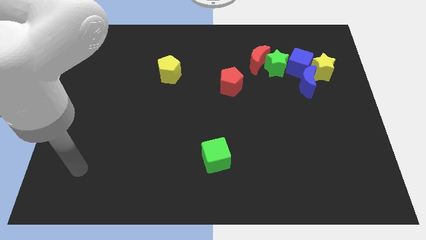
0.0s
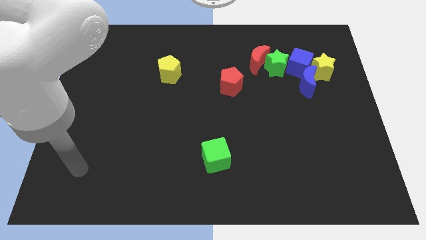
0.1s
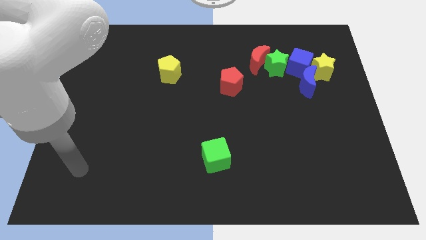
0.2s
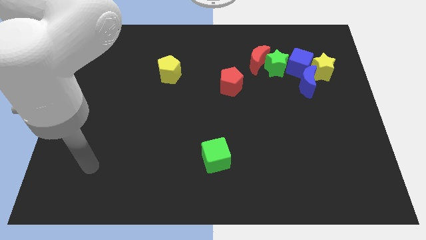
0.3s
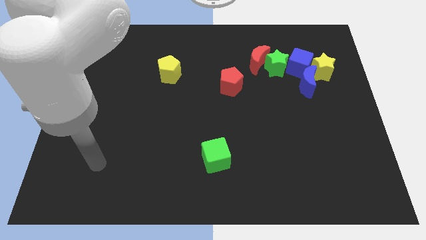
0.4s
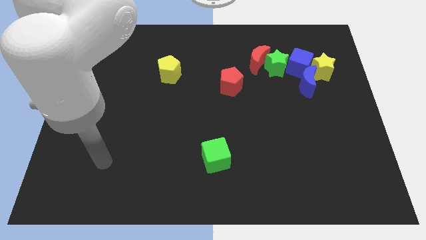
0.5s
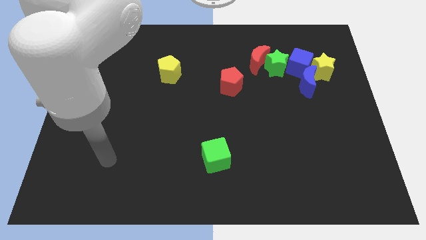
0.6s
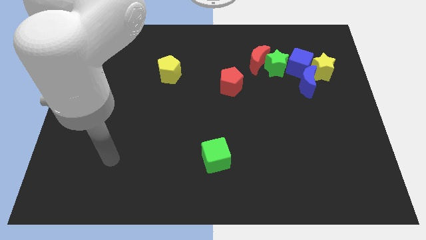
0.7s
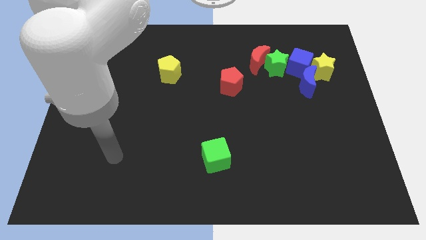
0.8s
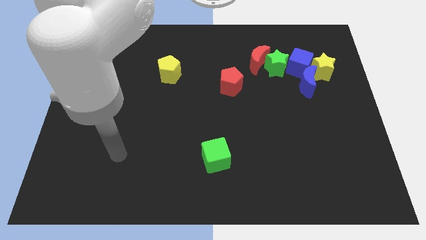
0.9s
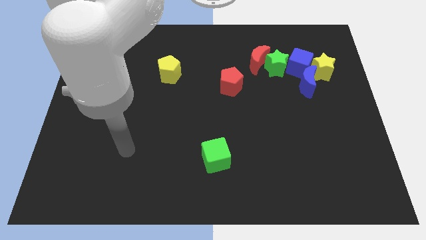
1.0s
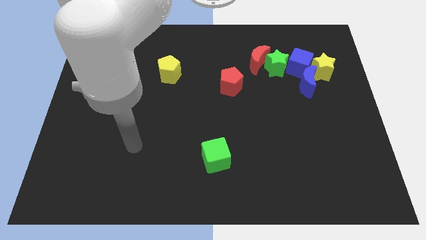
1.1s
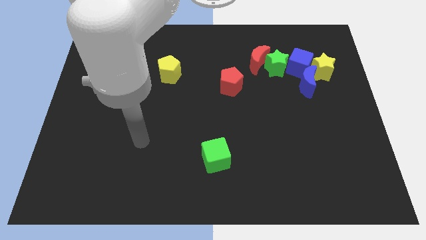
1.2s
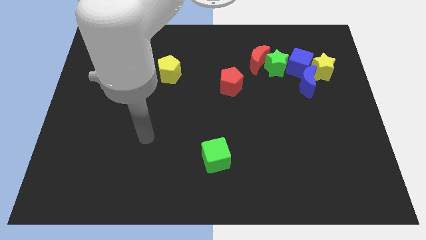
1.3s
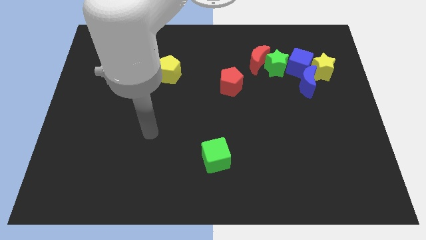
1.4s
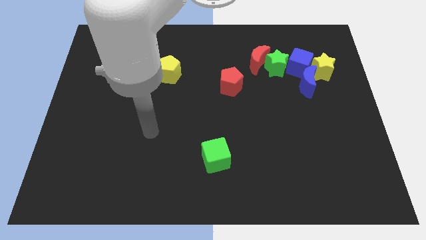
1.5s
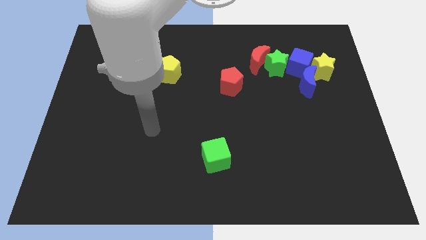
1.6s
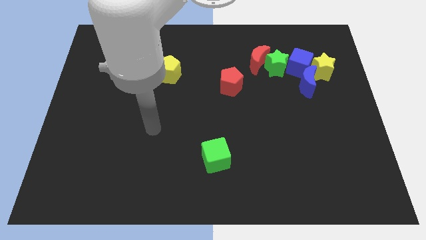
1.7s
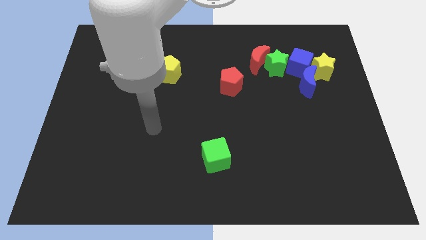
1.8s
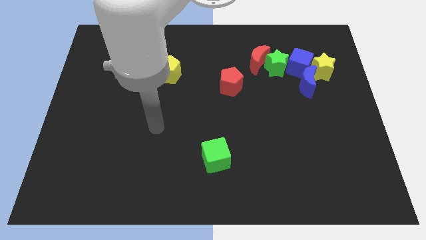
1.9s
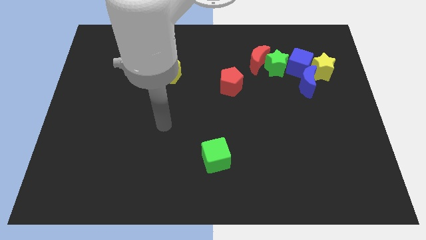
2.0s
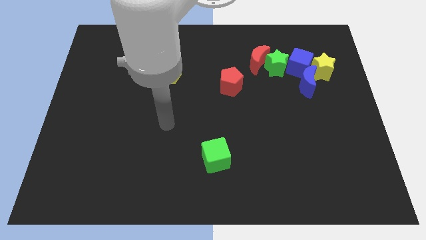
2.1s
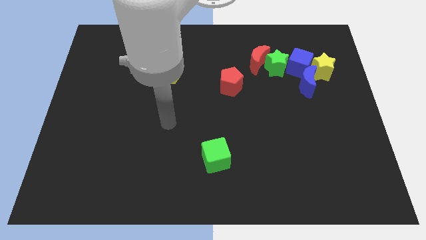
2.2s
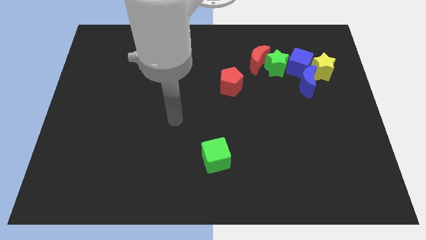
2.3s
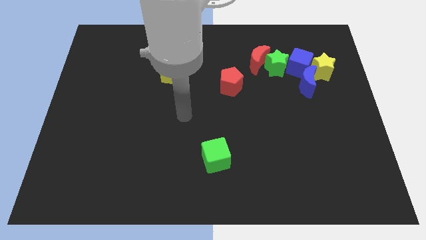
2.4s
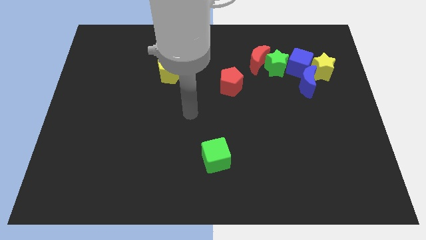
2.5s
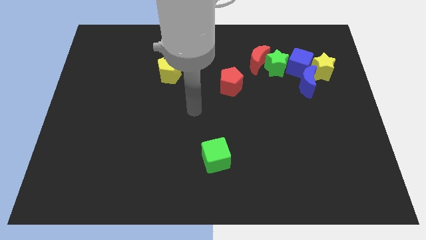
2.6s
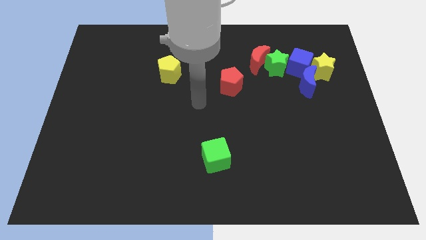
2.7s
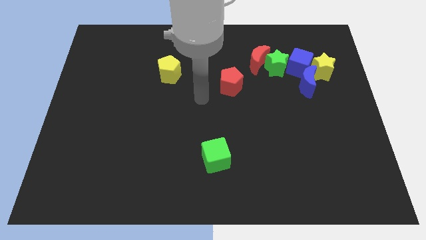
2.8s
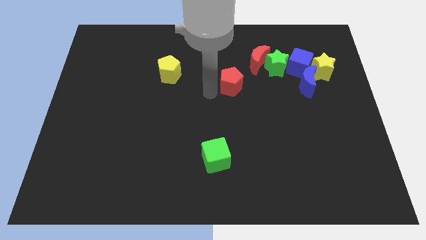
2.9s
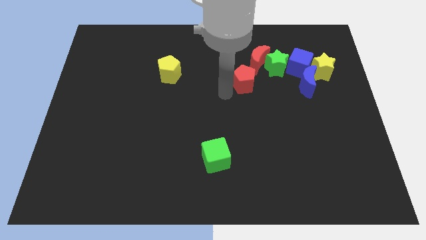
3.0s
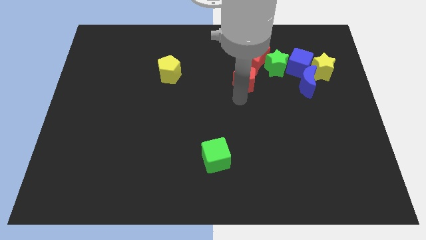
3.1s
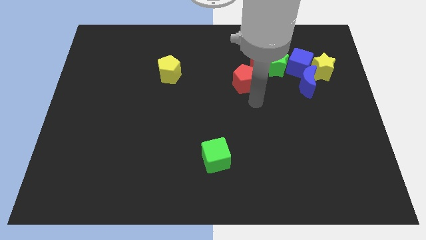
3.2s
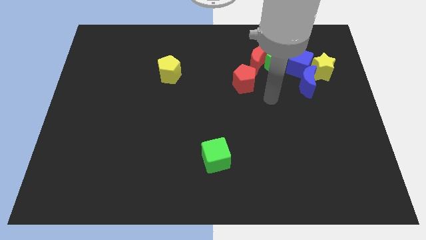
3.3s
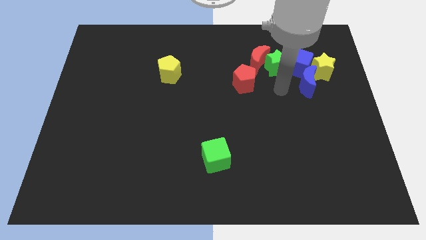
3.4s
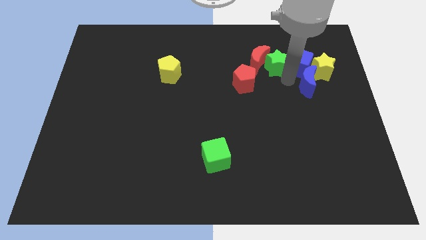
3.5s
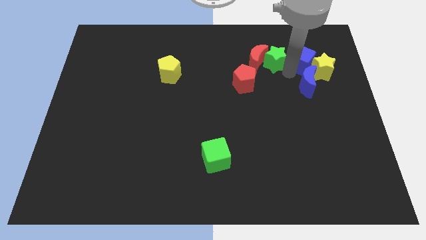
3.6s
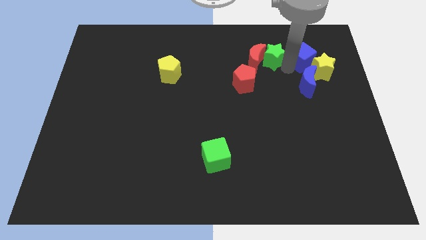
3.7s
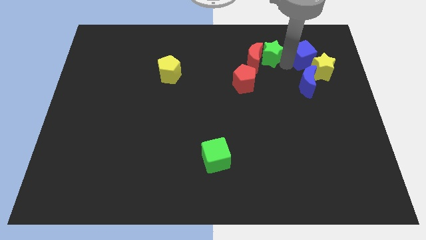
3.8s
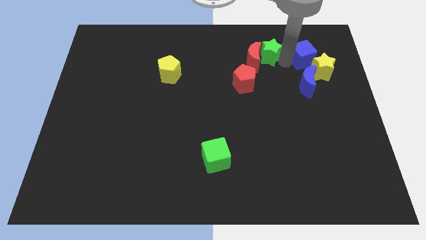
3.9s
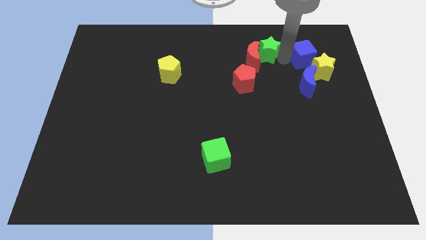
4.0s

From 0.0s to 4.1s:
separate green star and blue cube

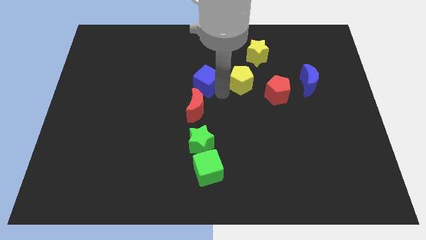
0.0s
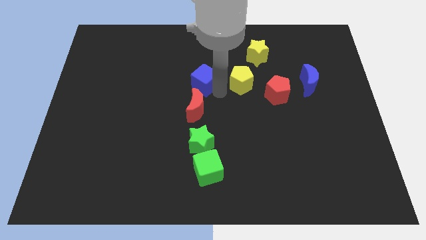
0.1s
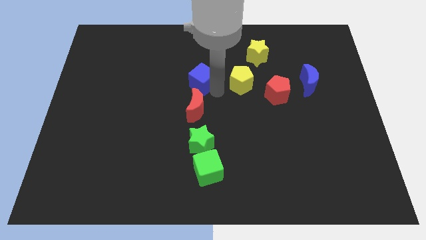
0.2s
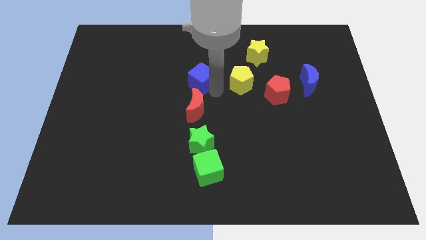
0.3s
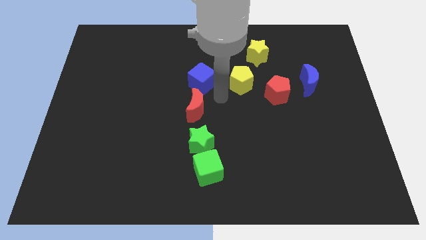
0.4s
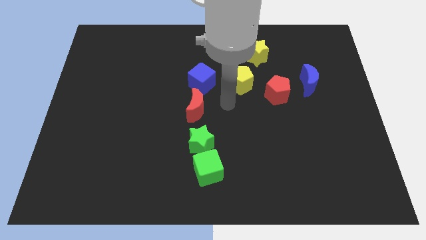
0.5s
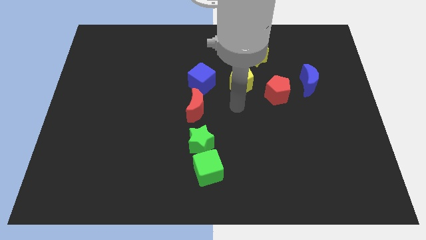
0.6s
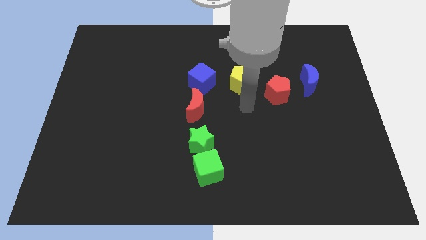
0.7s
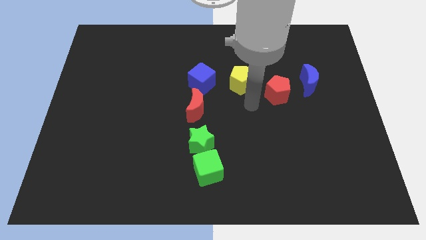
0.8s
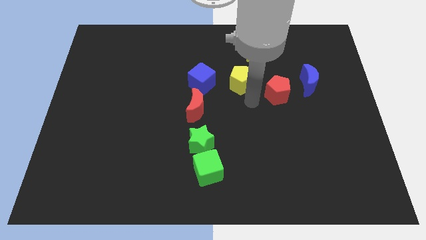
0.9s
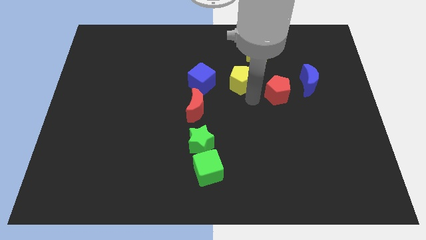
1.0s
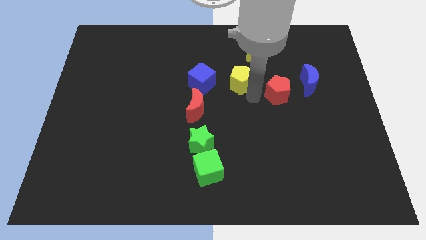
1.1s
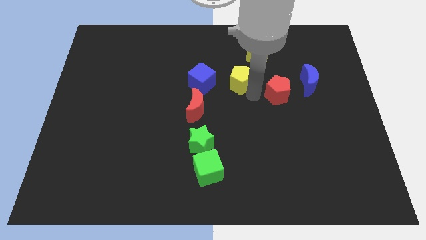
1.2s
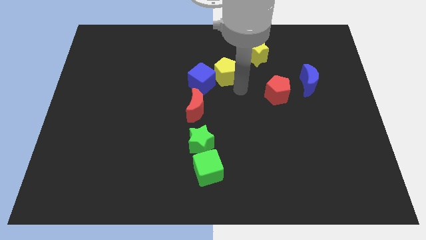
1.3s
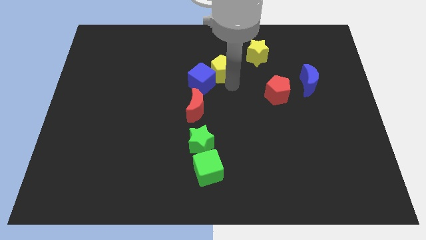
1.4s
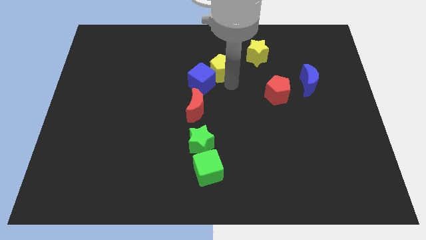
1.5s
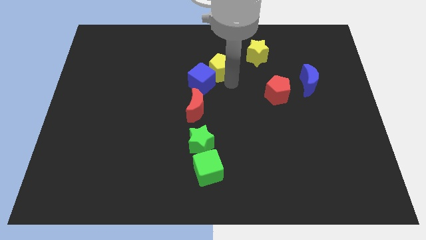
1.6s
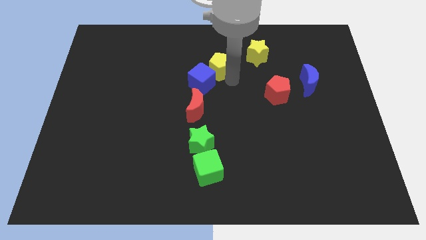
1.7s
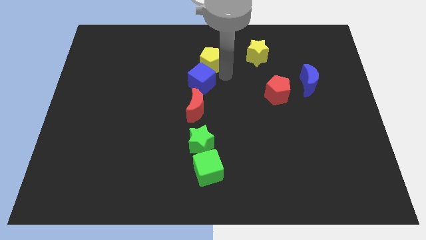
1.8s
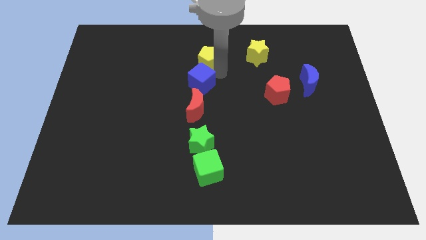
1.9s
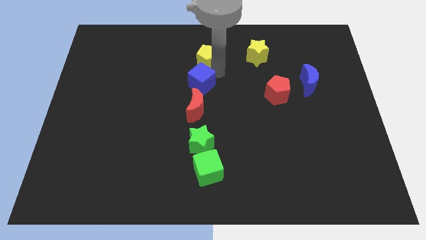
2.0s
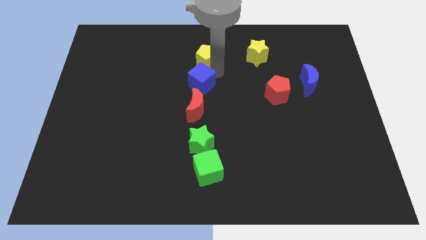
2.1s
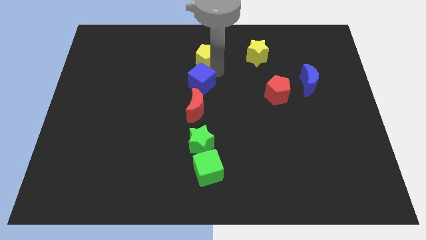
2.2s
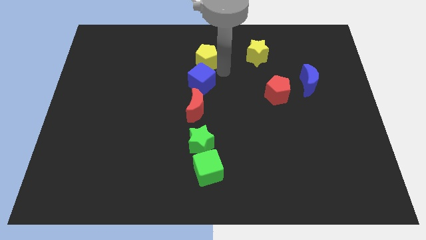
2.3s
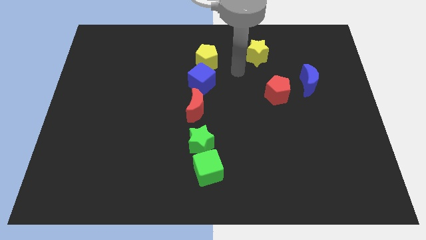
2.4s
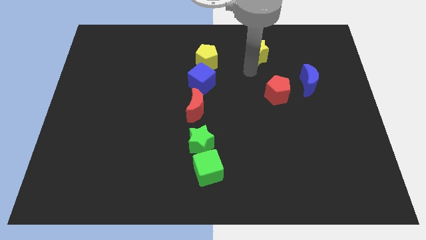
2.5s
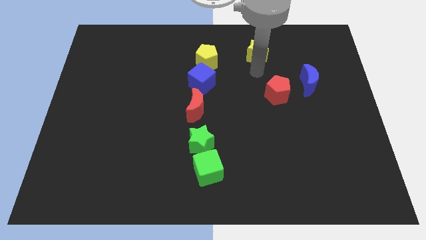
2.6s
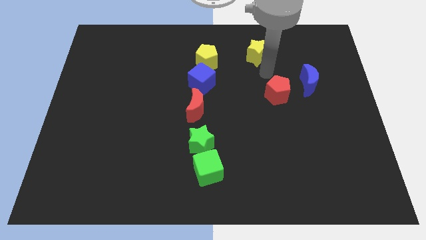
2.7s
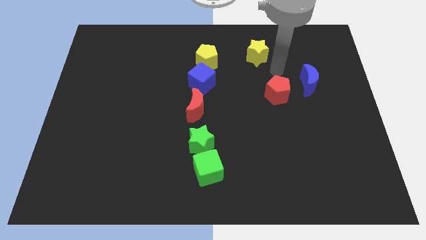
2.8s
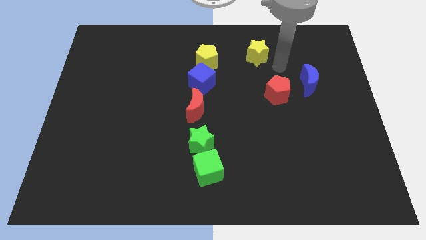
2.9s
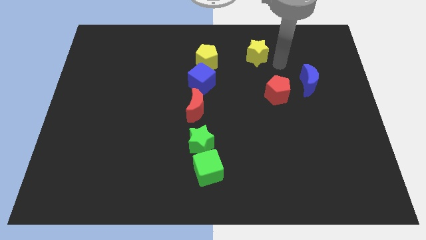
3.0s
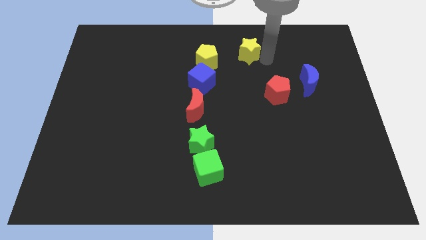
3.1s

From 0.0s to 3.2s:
put the yellow pentagon vertically above the blue cube

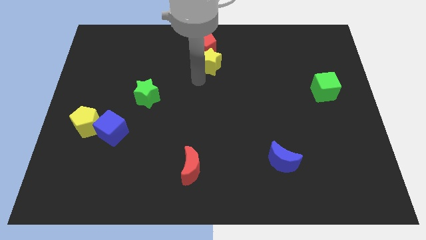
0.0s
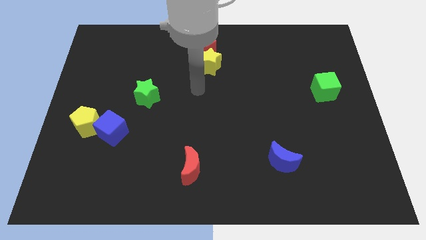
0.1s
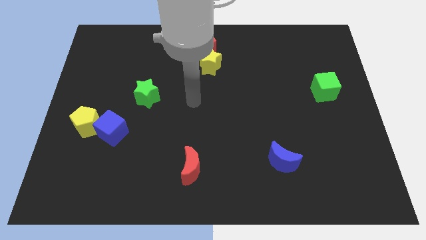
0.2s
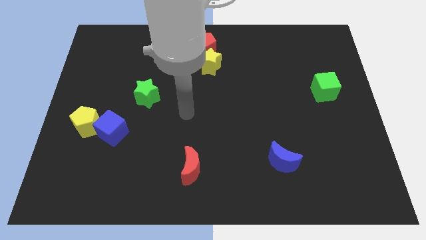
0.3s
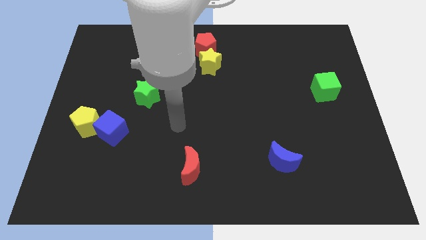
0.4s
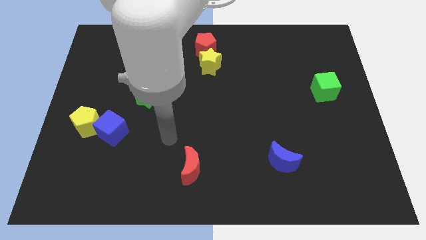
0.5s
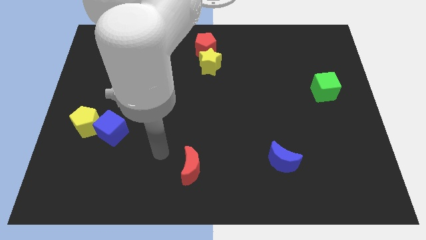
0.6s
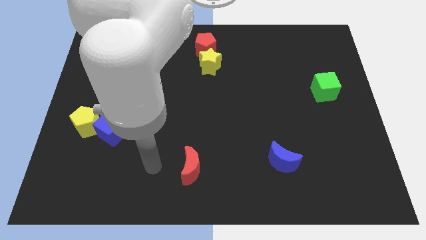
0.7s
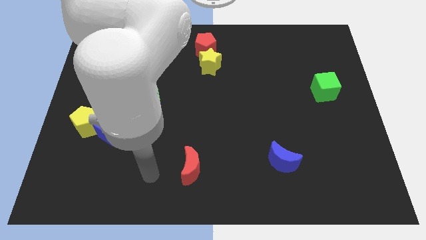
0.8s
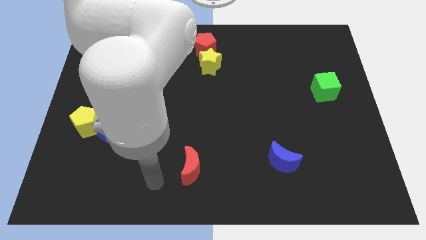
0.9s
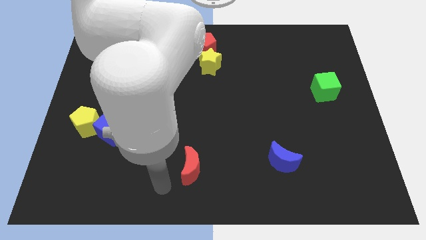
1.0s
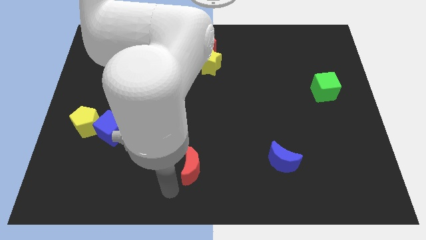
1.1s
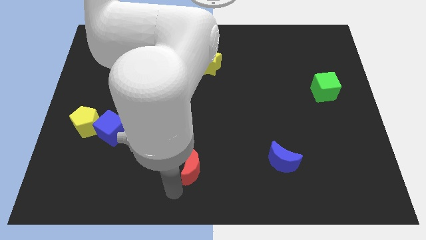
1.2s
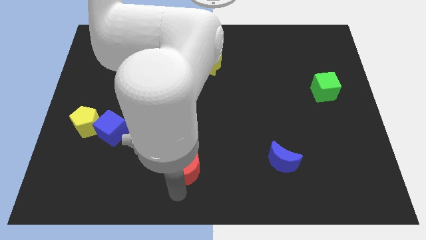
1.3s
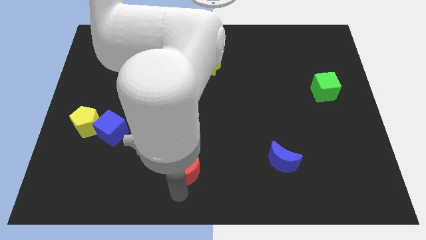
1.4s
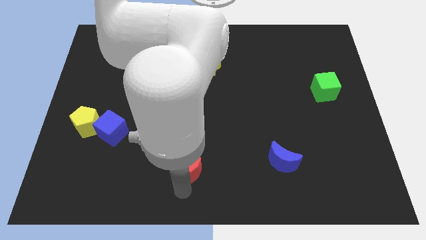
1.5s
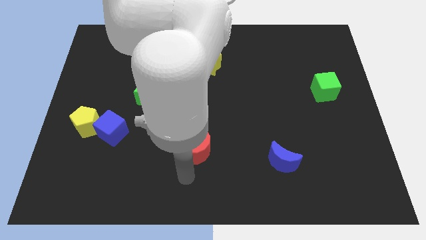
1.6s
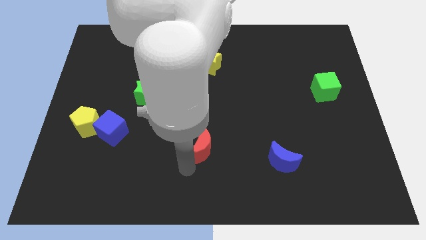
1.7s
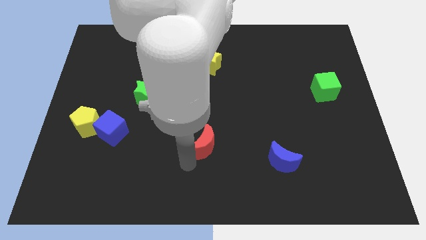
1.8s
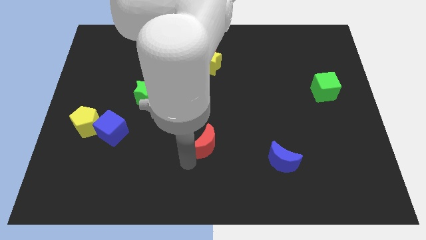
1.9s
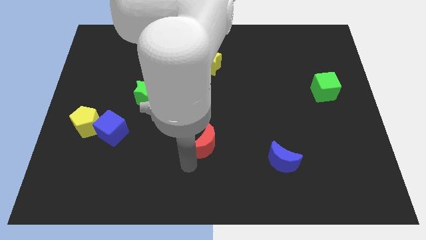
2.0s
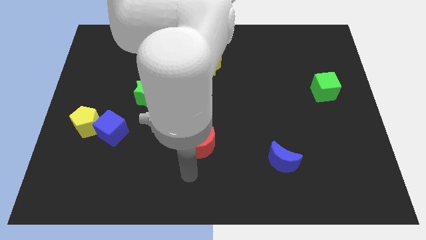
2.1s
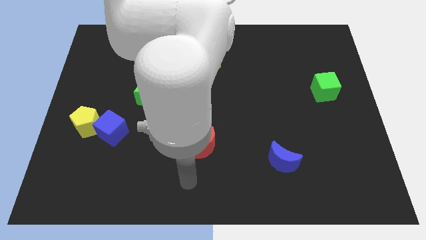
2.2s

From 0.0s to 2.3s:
slightly push the red moon upwards
